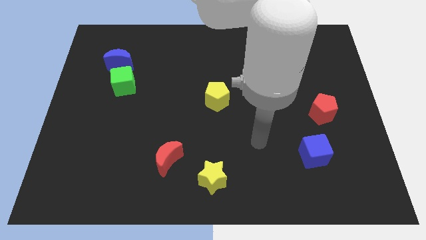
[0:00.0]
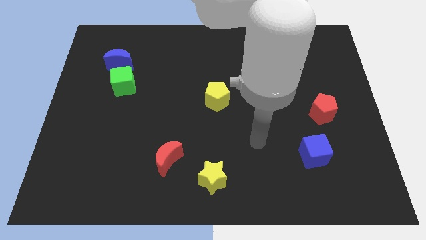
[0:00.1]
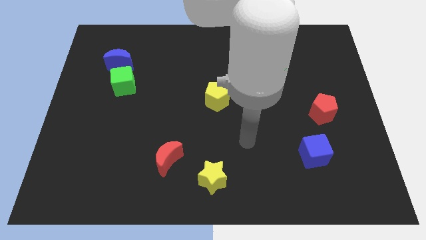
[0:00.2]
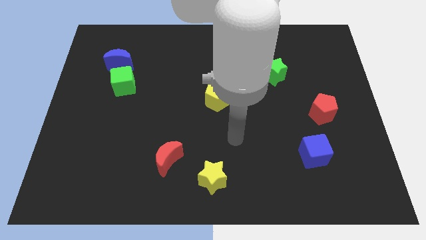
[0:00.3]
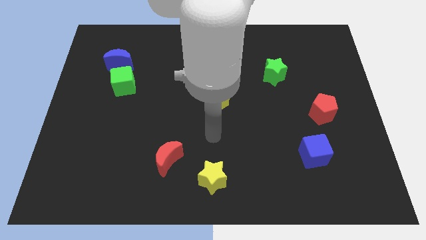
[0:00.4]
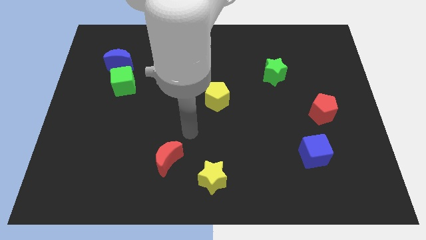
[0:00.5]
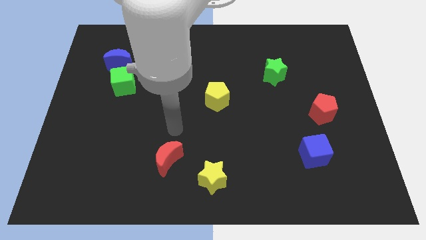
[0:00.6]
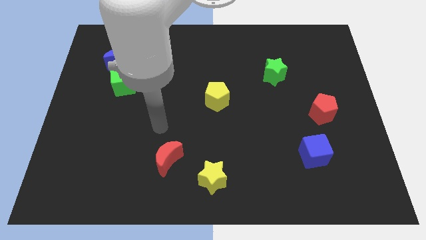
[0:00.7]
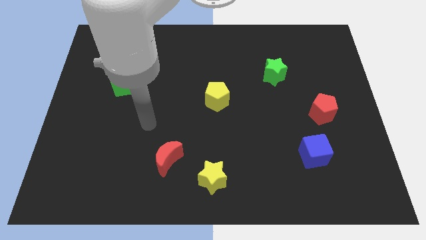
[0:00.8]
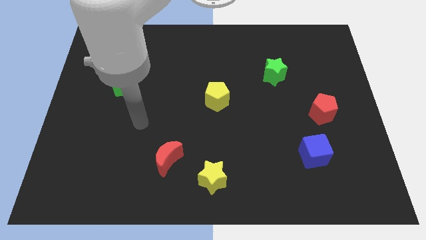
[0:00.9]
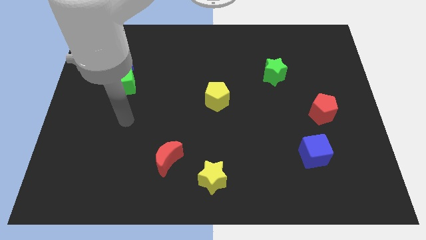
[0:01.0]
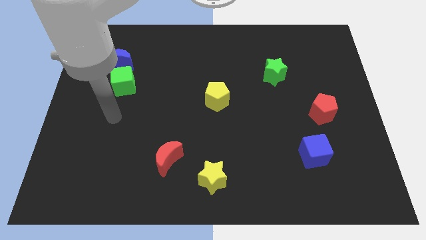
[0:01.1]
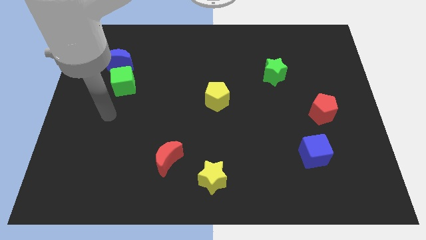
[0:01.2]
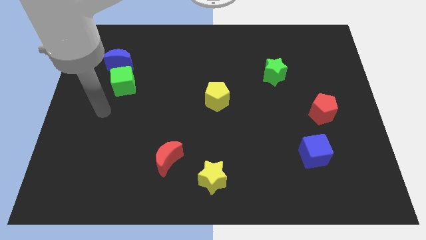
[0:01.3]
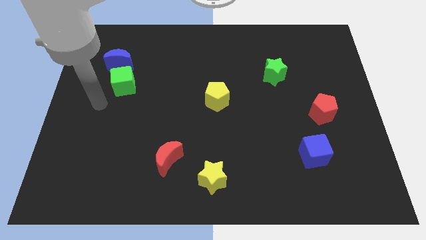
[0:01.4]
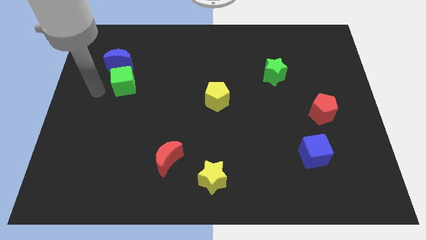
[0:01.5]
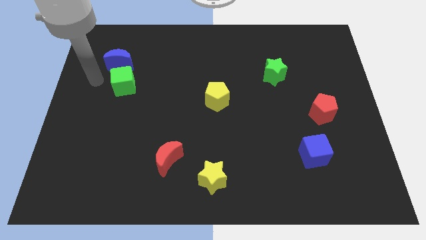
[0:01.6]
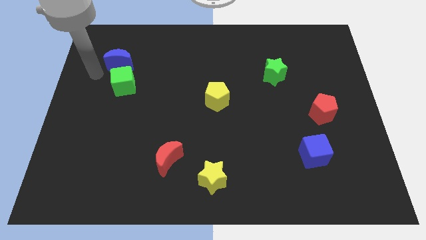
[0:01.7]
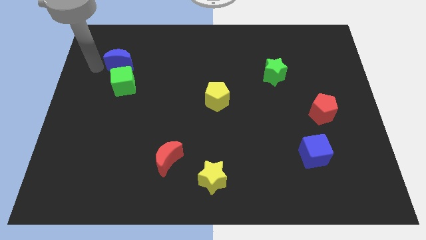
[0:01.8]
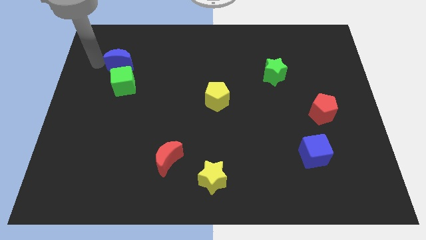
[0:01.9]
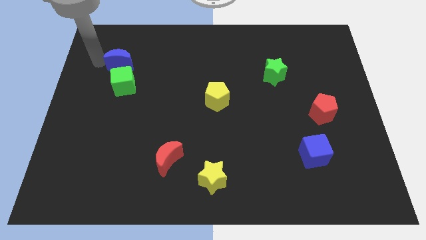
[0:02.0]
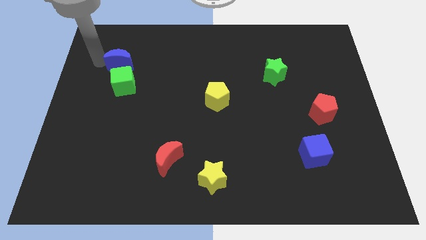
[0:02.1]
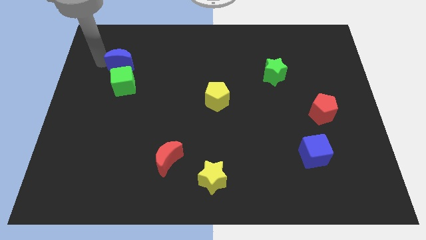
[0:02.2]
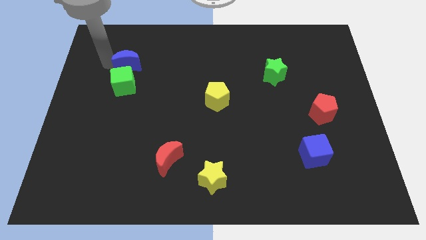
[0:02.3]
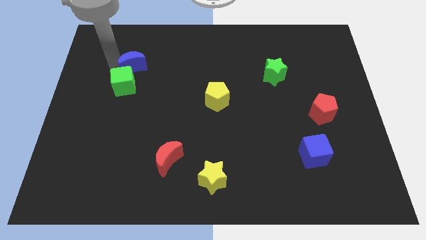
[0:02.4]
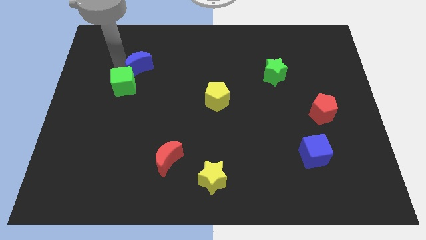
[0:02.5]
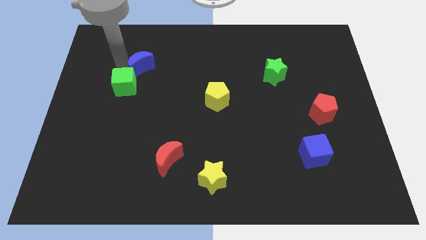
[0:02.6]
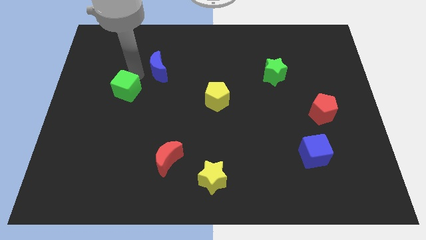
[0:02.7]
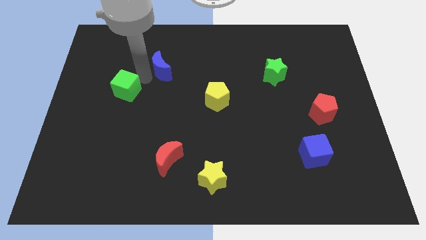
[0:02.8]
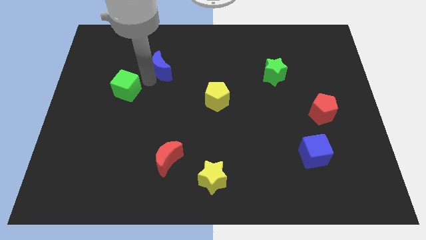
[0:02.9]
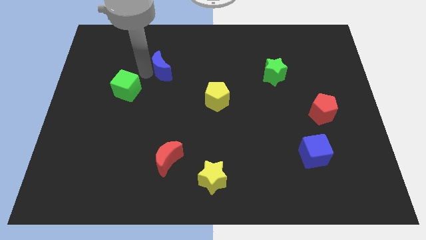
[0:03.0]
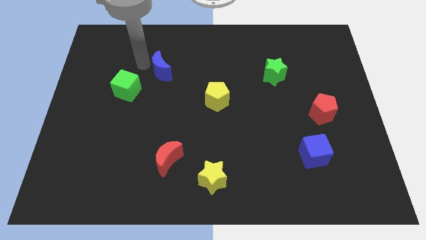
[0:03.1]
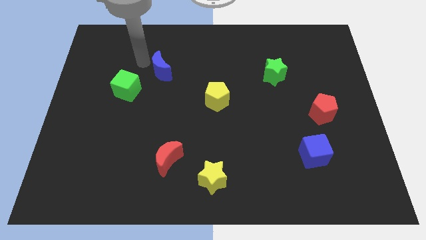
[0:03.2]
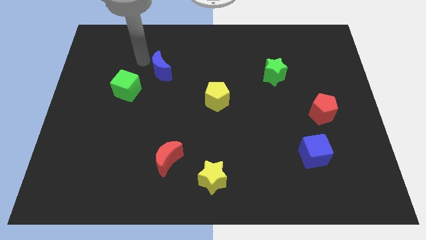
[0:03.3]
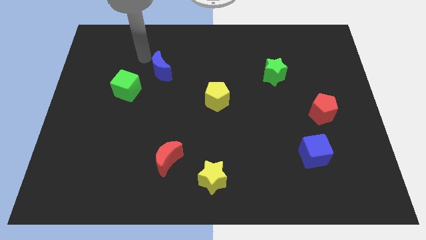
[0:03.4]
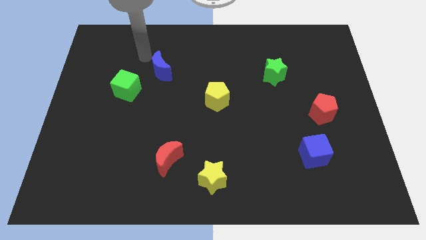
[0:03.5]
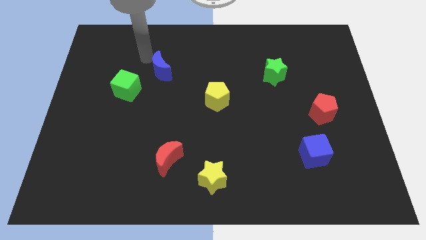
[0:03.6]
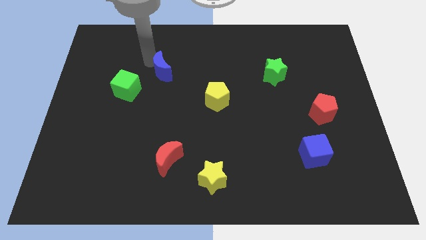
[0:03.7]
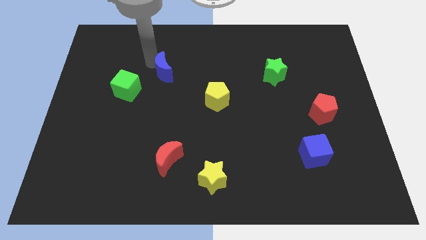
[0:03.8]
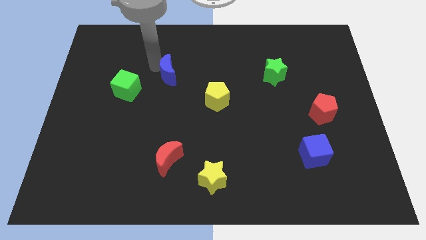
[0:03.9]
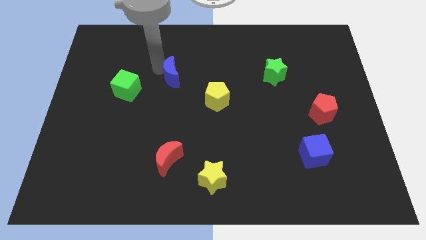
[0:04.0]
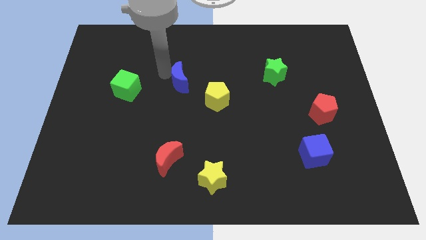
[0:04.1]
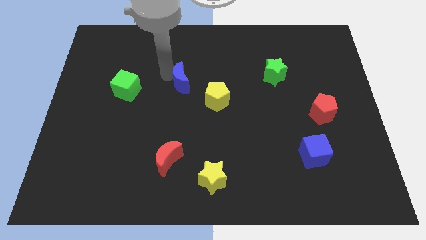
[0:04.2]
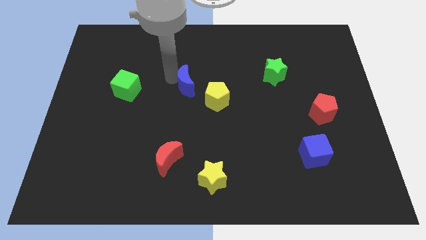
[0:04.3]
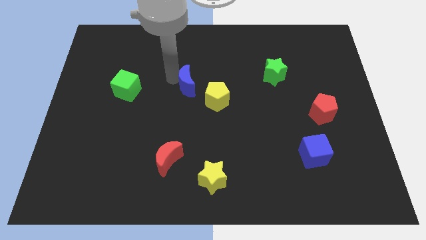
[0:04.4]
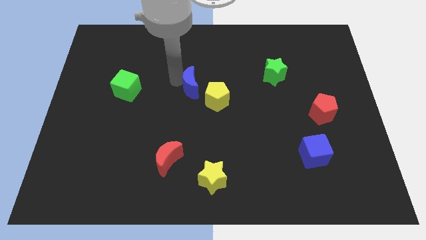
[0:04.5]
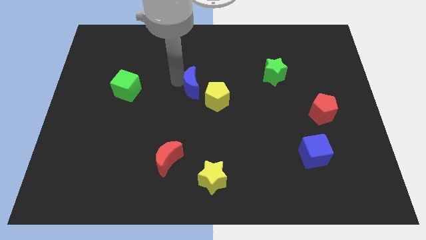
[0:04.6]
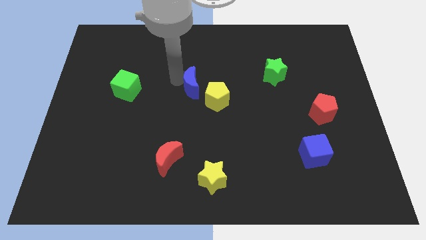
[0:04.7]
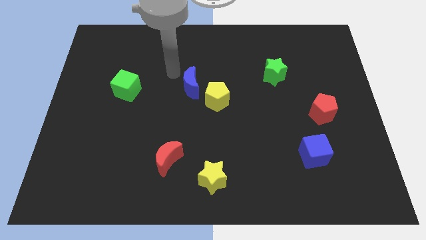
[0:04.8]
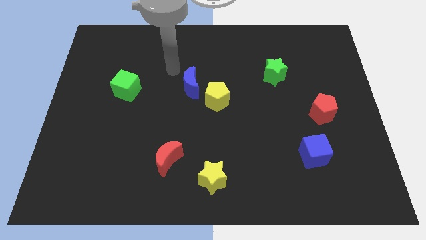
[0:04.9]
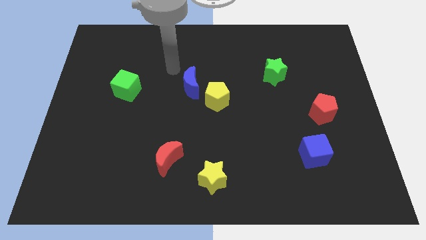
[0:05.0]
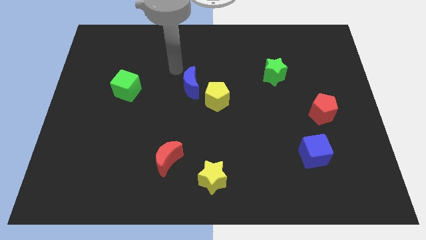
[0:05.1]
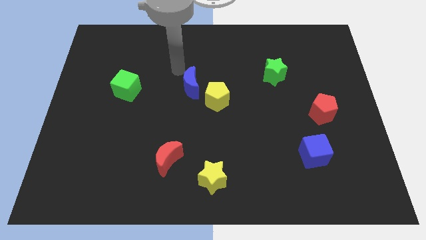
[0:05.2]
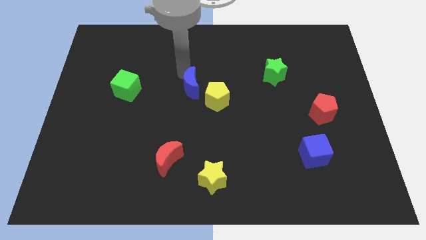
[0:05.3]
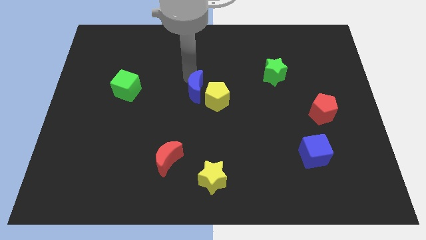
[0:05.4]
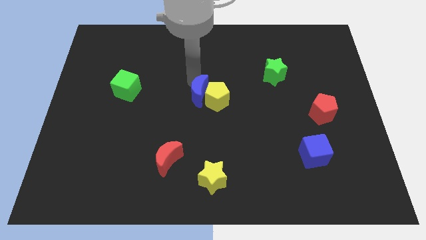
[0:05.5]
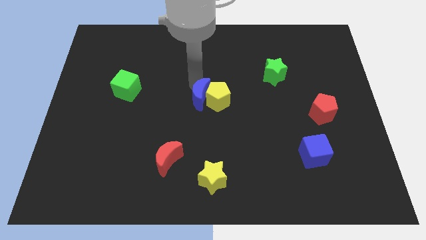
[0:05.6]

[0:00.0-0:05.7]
slide the blue moon towards the yellow pentagon

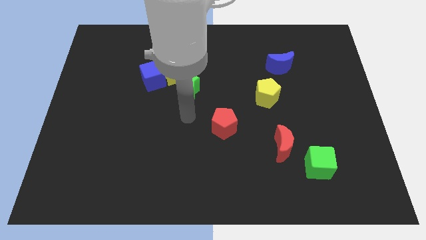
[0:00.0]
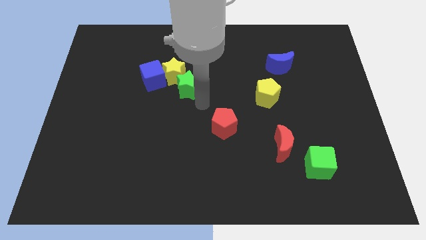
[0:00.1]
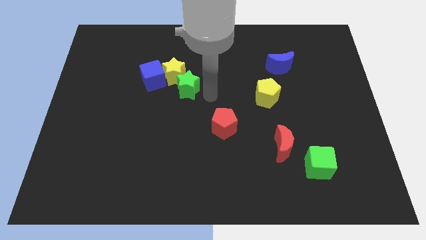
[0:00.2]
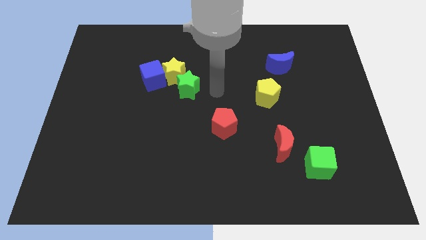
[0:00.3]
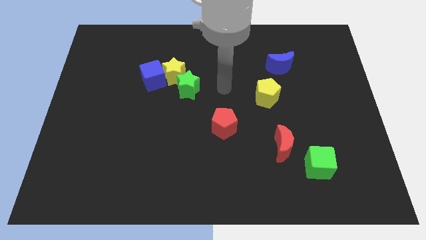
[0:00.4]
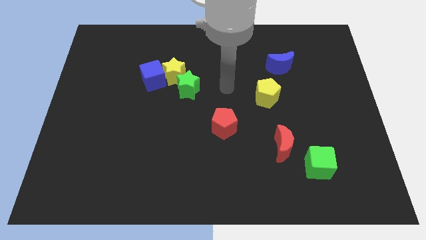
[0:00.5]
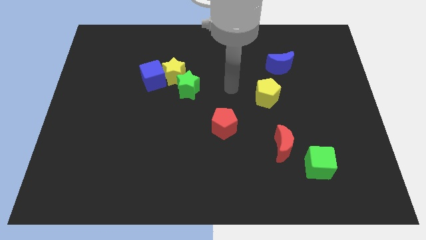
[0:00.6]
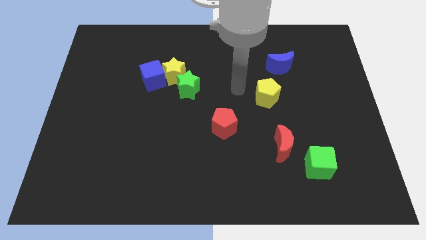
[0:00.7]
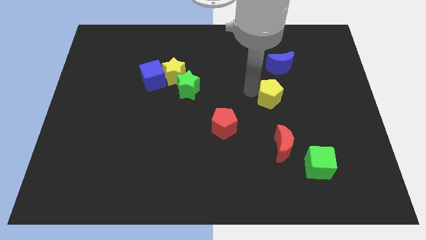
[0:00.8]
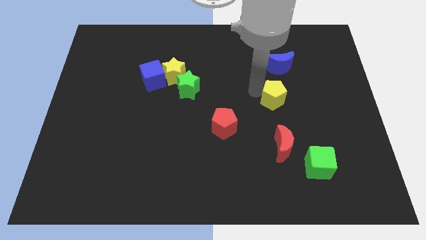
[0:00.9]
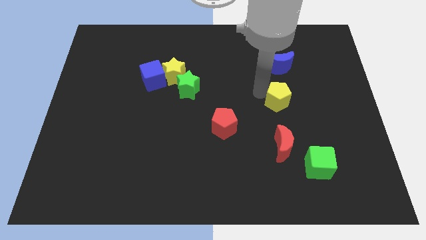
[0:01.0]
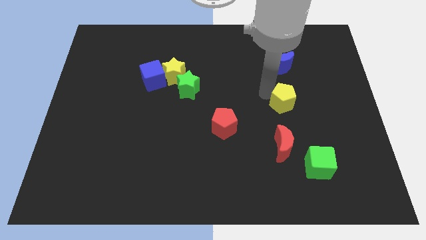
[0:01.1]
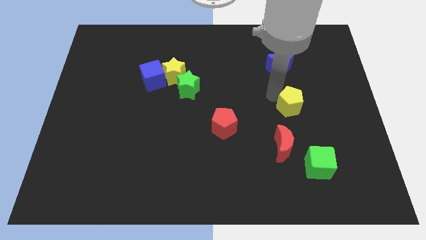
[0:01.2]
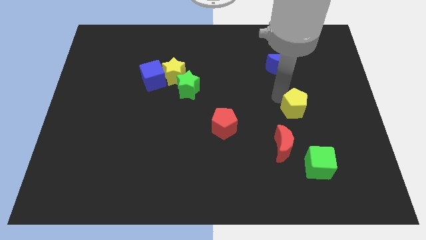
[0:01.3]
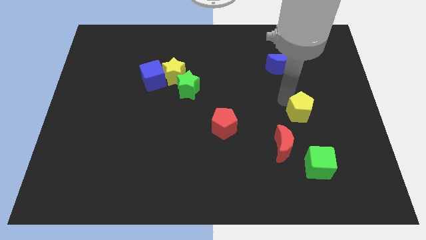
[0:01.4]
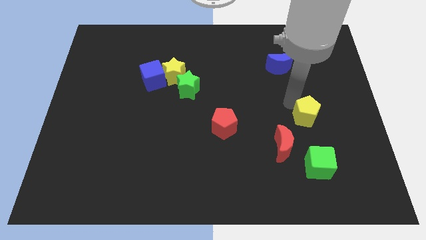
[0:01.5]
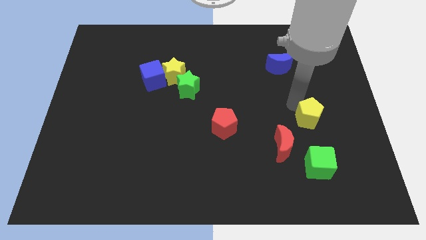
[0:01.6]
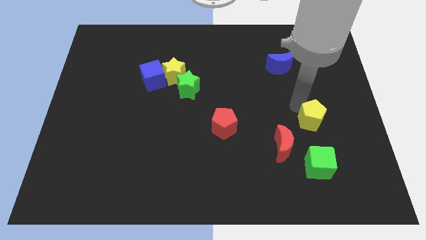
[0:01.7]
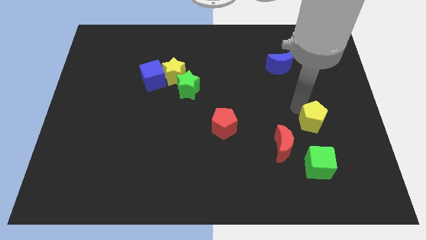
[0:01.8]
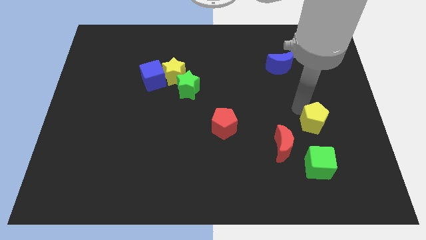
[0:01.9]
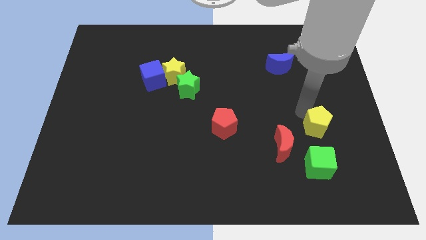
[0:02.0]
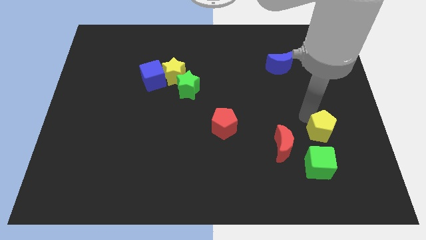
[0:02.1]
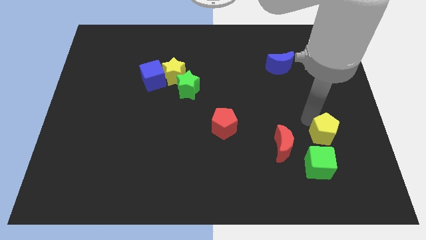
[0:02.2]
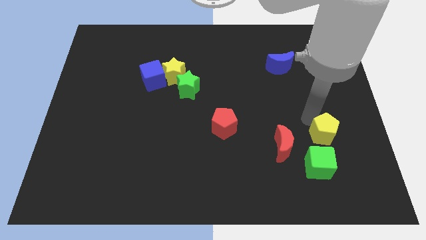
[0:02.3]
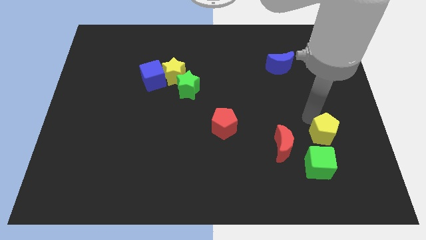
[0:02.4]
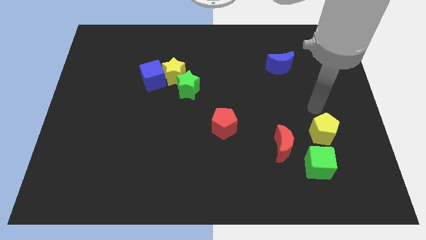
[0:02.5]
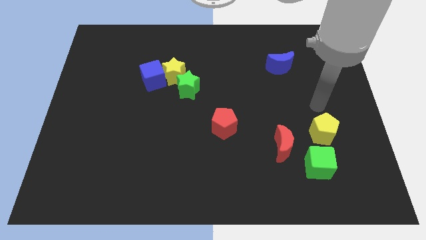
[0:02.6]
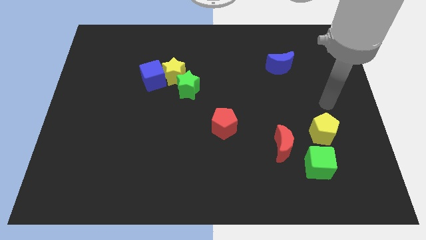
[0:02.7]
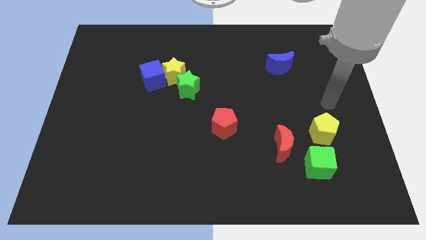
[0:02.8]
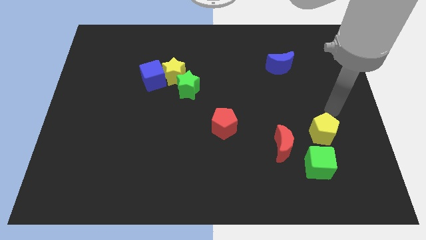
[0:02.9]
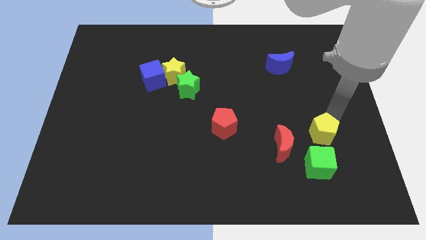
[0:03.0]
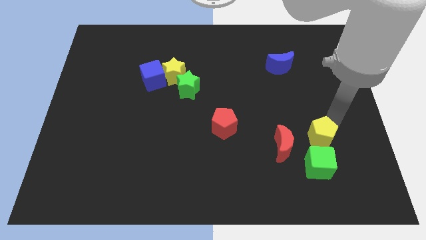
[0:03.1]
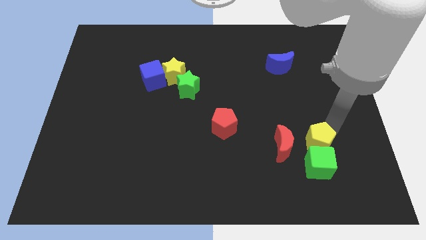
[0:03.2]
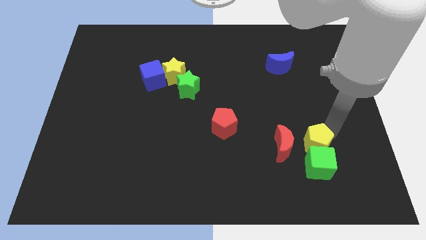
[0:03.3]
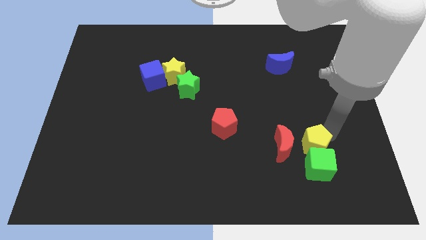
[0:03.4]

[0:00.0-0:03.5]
move the yellow pentagon close to the green cube
